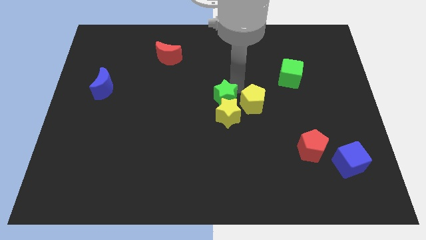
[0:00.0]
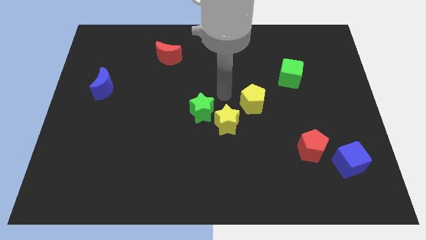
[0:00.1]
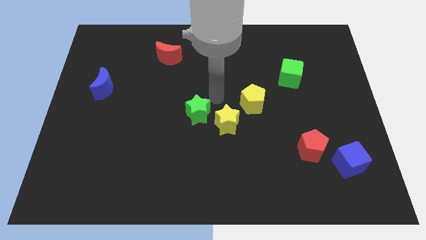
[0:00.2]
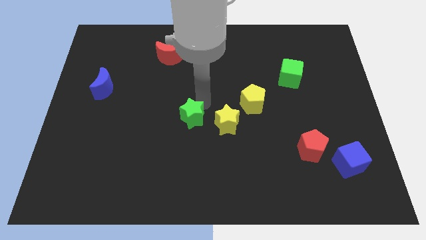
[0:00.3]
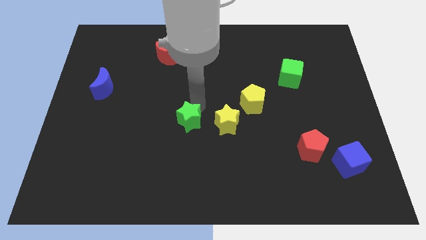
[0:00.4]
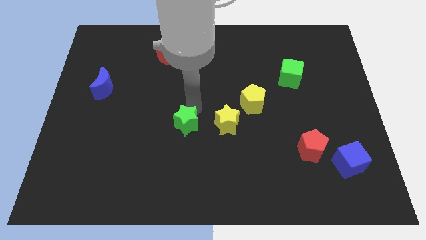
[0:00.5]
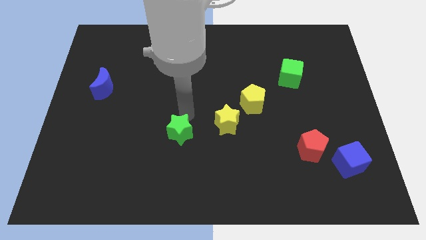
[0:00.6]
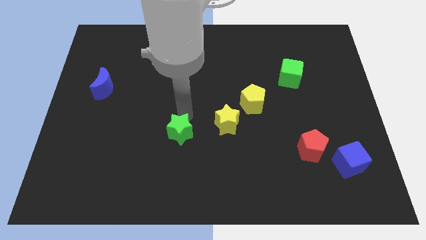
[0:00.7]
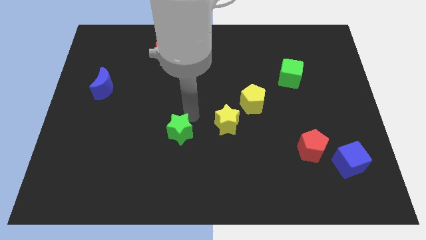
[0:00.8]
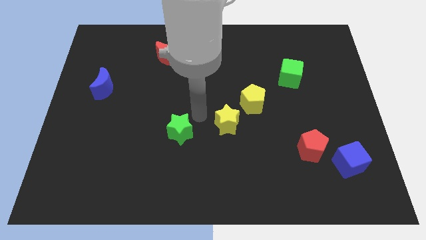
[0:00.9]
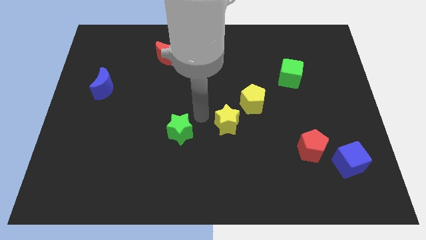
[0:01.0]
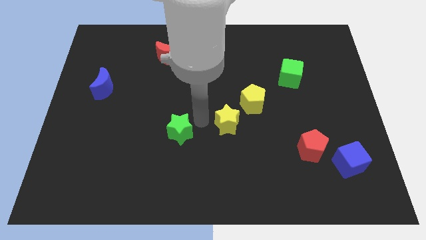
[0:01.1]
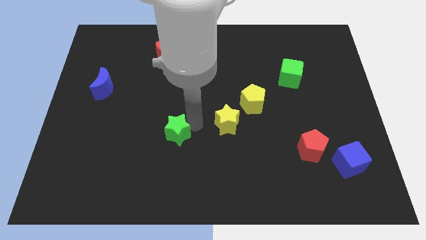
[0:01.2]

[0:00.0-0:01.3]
separate green star and yellow star

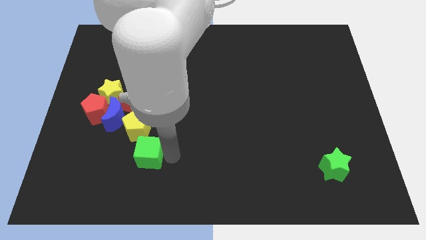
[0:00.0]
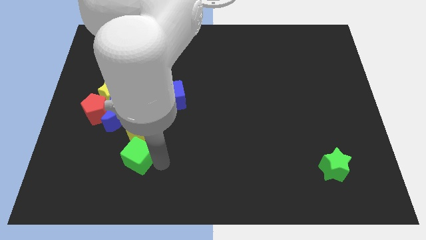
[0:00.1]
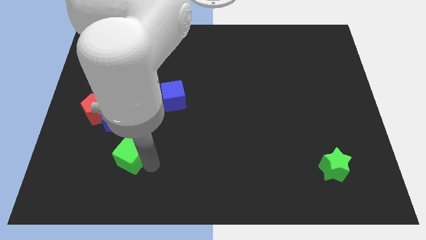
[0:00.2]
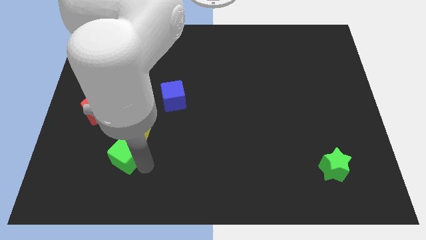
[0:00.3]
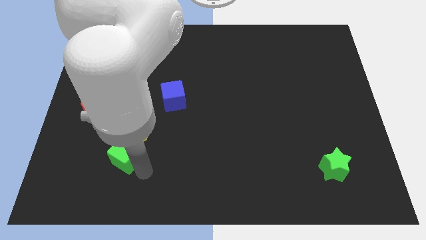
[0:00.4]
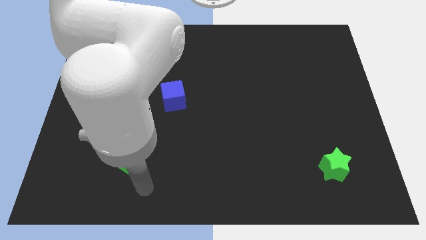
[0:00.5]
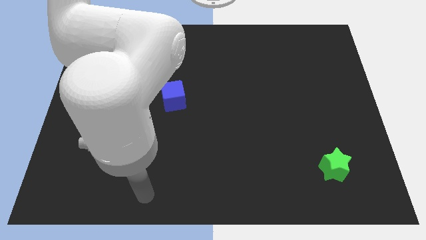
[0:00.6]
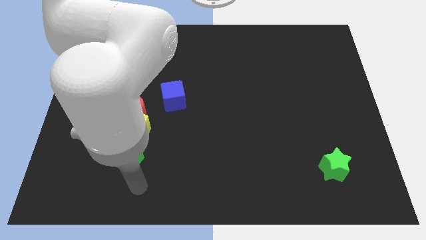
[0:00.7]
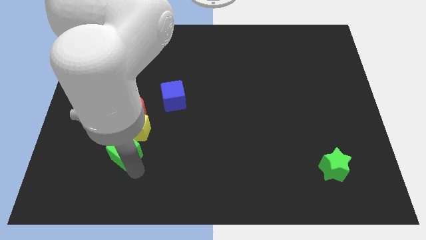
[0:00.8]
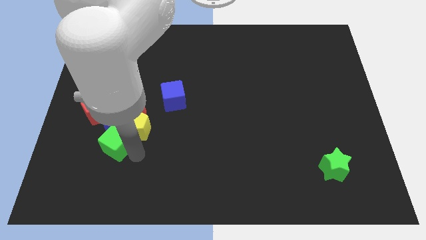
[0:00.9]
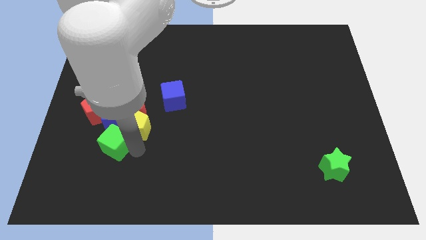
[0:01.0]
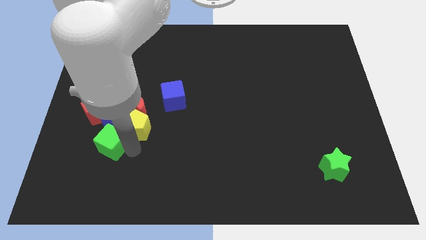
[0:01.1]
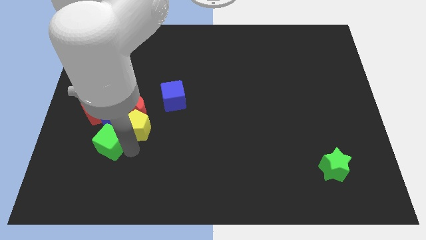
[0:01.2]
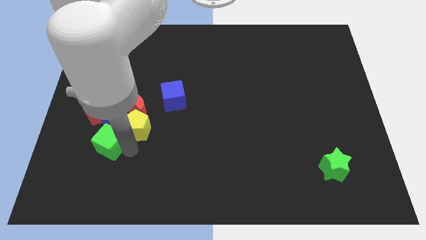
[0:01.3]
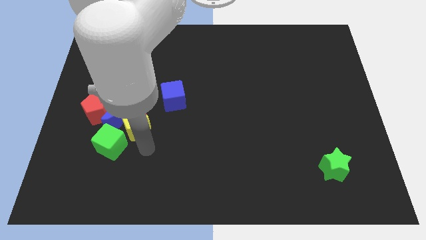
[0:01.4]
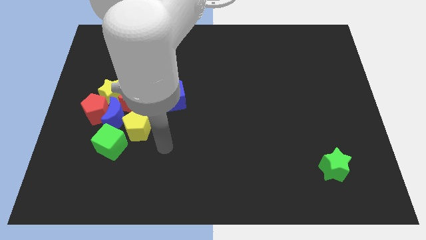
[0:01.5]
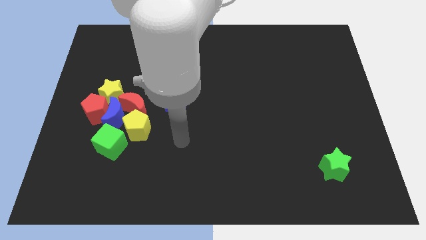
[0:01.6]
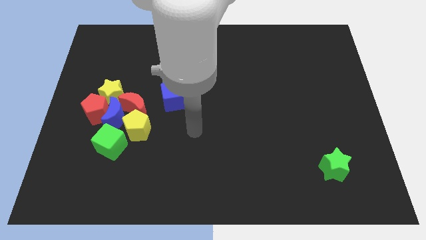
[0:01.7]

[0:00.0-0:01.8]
move the green cube under the blue moon

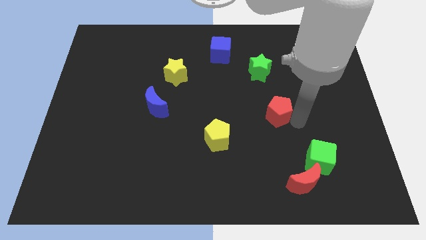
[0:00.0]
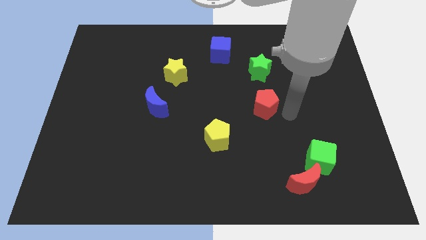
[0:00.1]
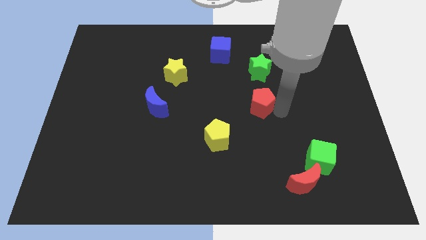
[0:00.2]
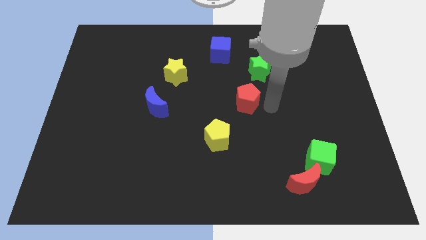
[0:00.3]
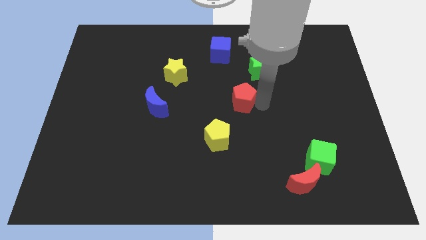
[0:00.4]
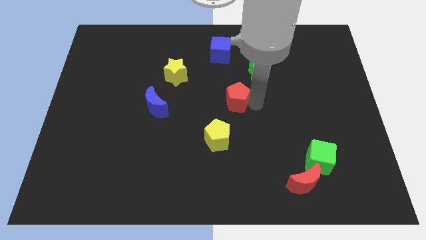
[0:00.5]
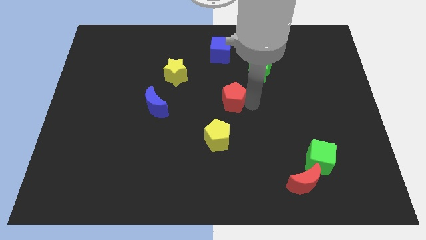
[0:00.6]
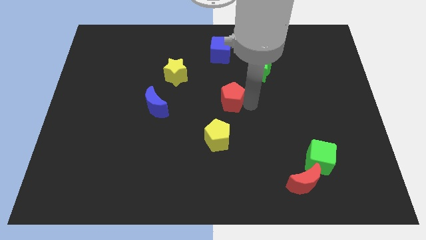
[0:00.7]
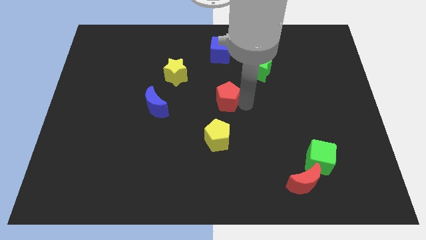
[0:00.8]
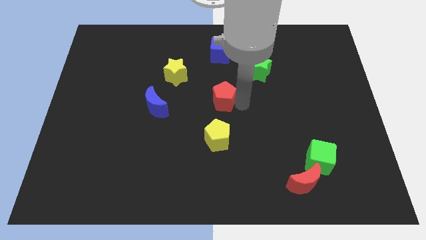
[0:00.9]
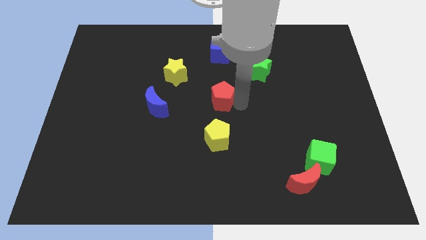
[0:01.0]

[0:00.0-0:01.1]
move red pentagon to the center of the board

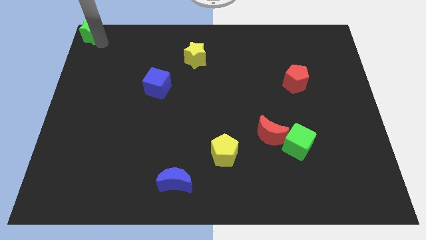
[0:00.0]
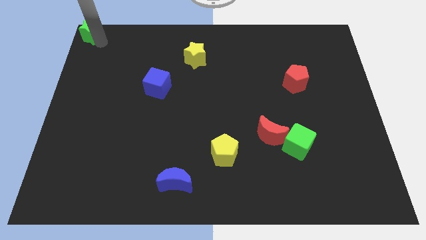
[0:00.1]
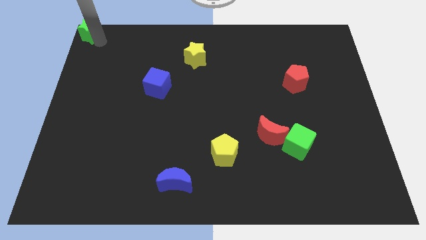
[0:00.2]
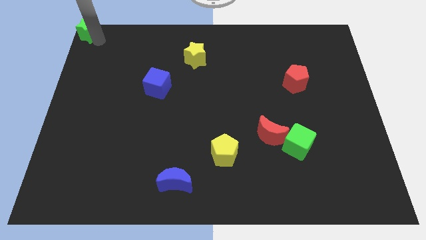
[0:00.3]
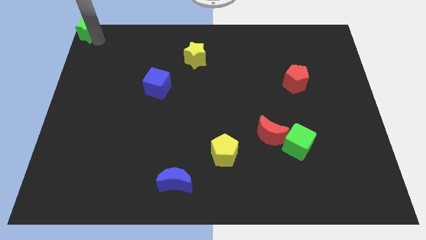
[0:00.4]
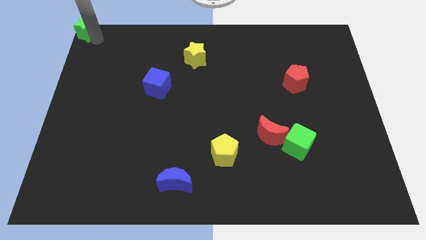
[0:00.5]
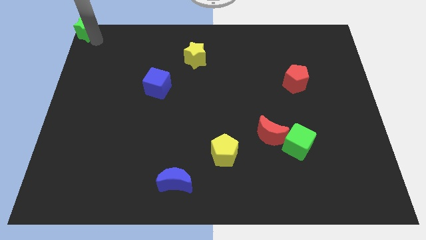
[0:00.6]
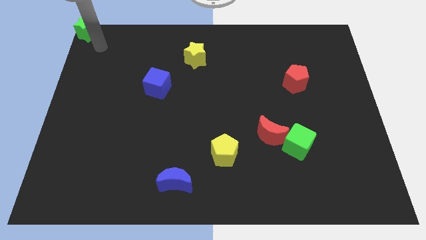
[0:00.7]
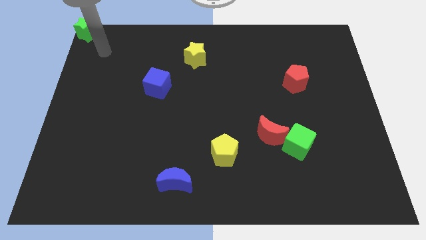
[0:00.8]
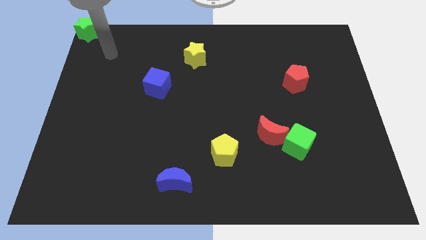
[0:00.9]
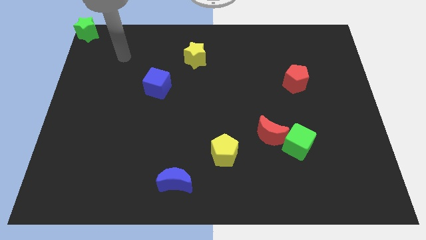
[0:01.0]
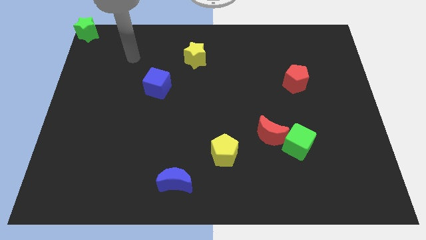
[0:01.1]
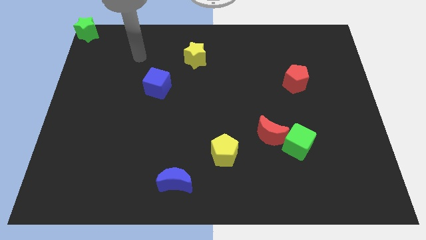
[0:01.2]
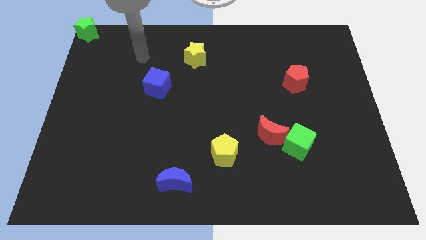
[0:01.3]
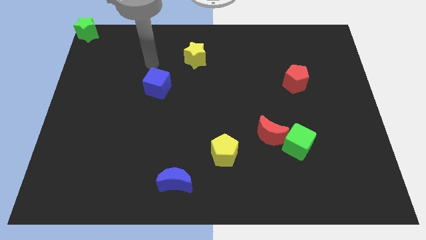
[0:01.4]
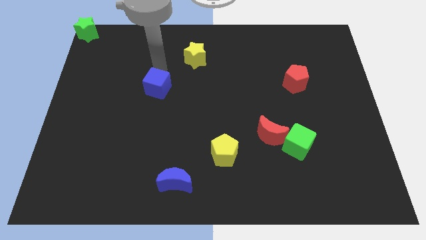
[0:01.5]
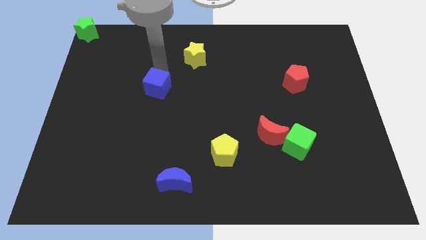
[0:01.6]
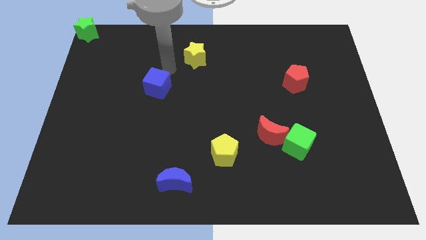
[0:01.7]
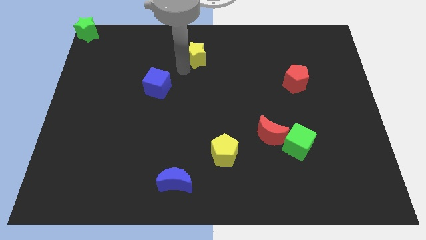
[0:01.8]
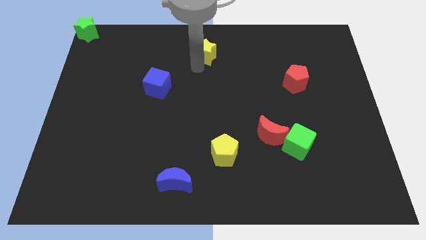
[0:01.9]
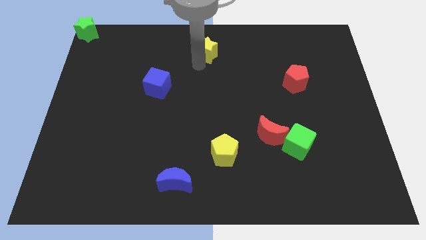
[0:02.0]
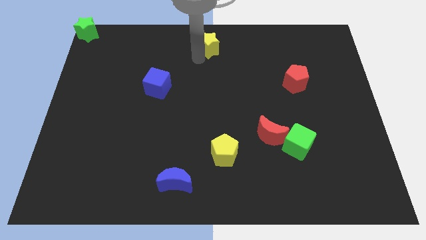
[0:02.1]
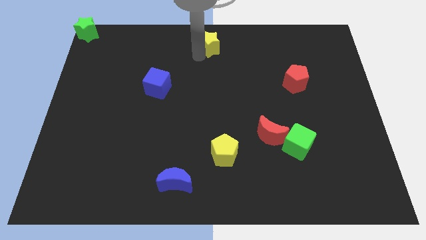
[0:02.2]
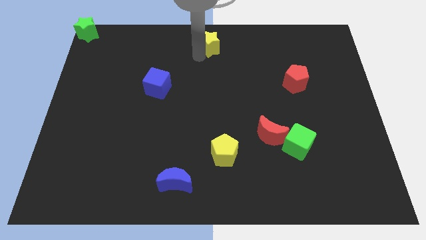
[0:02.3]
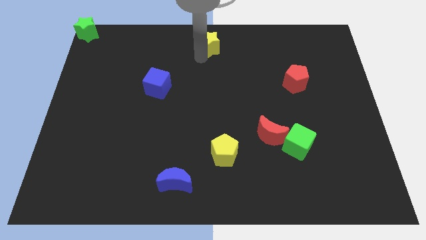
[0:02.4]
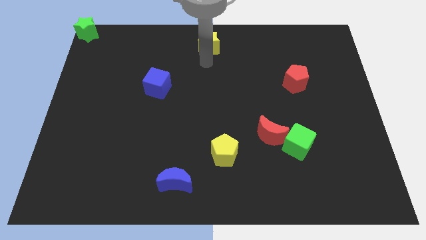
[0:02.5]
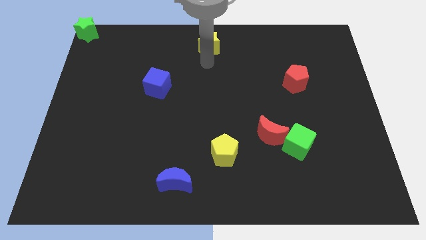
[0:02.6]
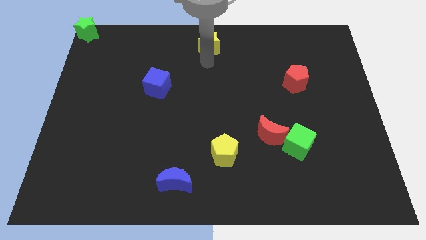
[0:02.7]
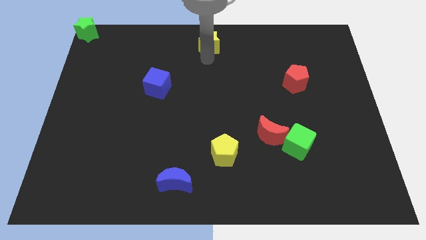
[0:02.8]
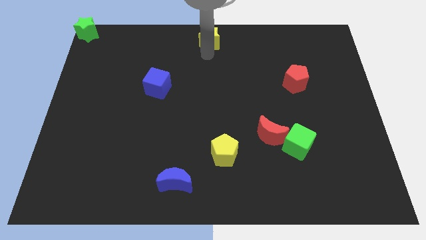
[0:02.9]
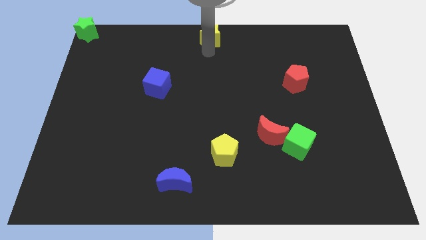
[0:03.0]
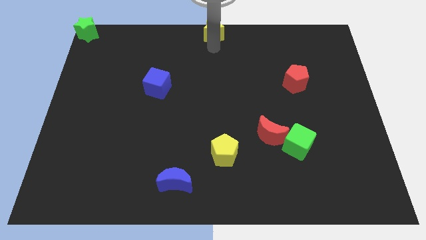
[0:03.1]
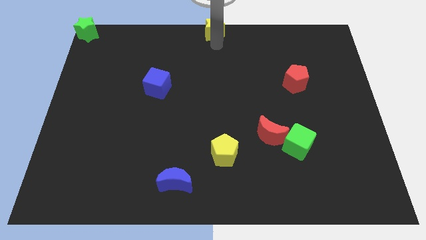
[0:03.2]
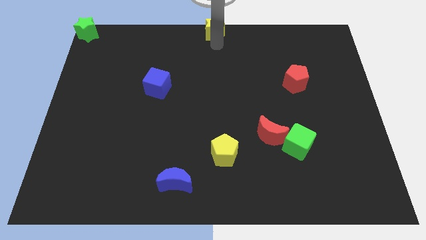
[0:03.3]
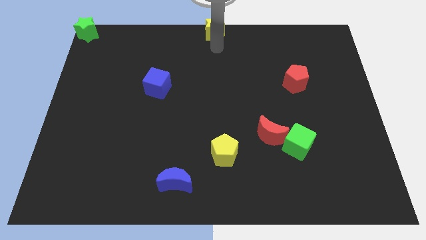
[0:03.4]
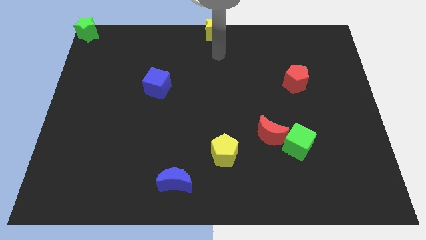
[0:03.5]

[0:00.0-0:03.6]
move yellow star to top center of the board

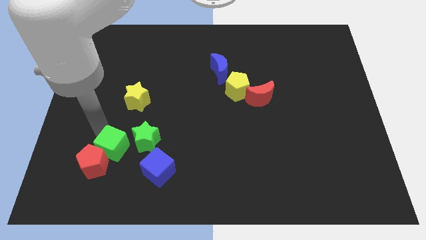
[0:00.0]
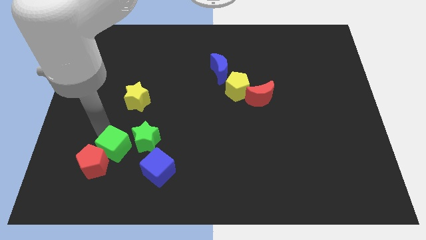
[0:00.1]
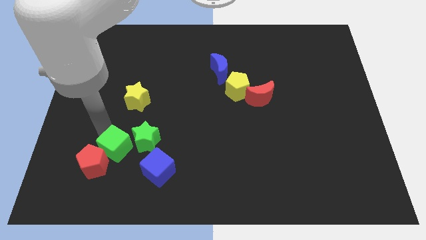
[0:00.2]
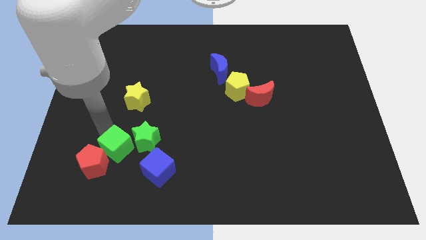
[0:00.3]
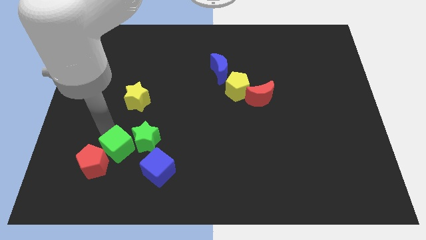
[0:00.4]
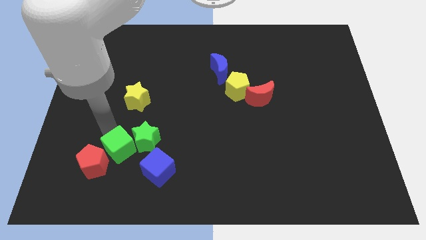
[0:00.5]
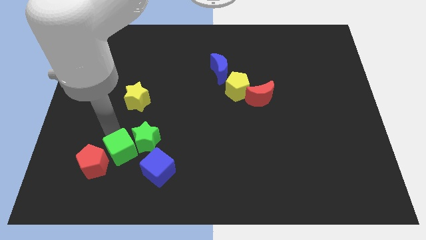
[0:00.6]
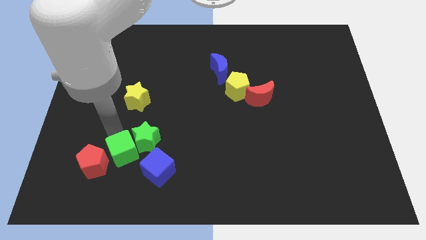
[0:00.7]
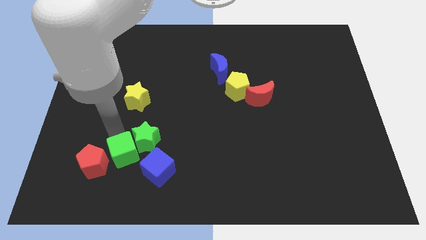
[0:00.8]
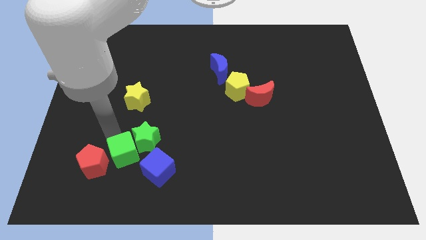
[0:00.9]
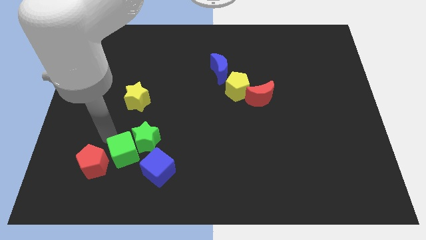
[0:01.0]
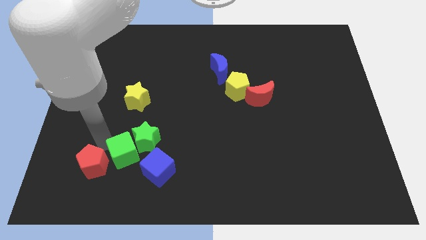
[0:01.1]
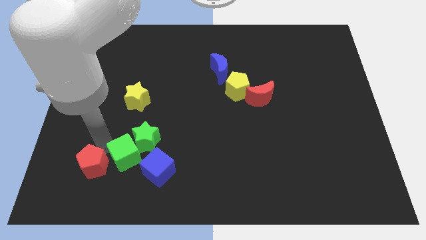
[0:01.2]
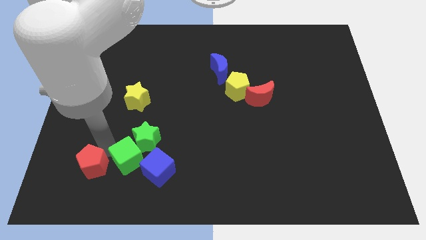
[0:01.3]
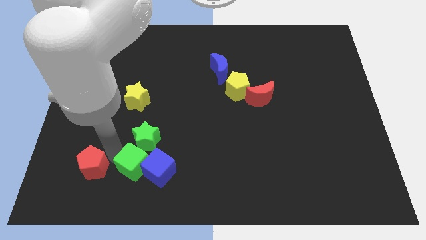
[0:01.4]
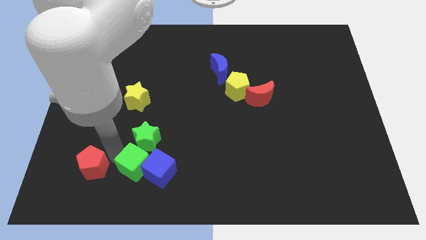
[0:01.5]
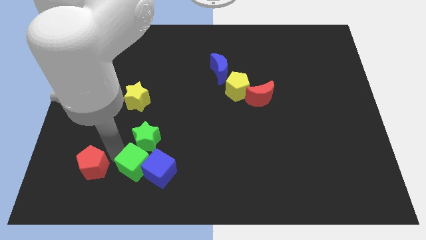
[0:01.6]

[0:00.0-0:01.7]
move the green cube into the blue cube
